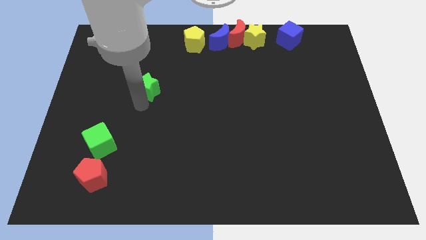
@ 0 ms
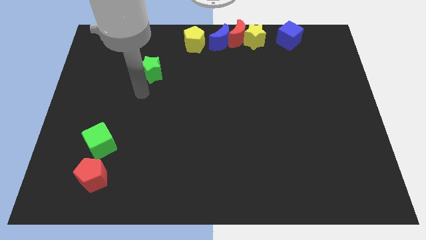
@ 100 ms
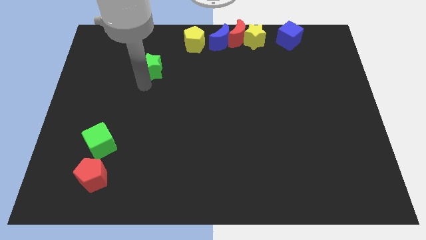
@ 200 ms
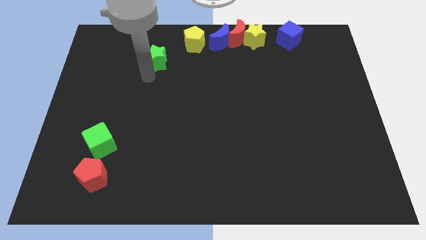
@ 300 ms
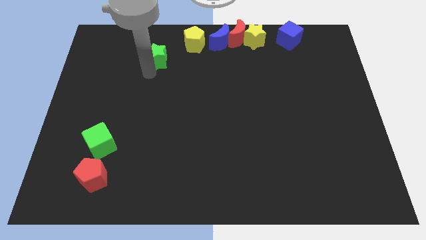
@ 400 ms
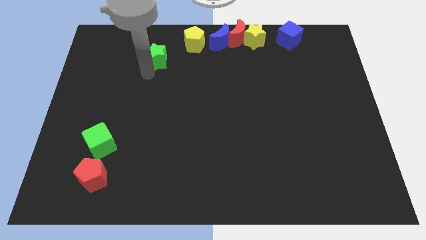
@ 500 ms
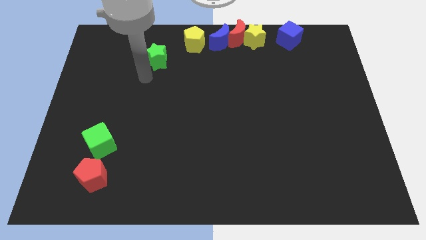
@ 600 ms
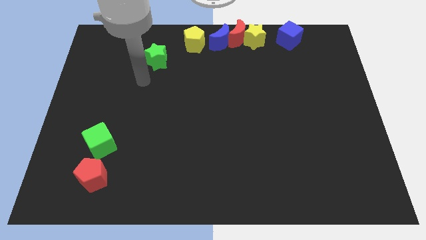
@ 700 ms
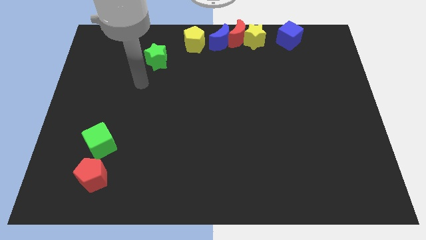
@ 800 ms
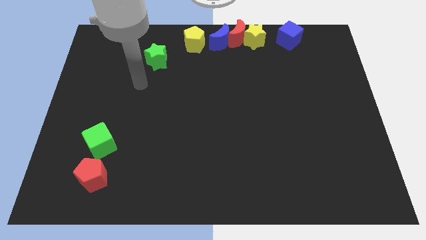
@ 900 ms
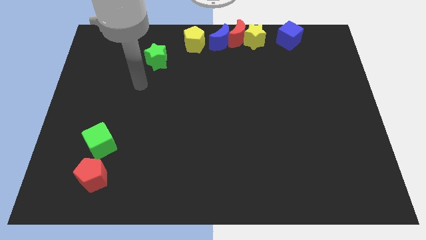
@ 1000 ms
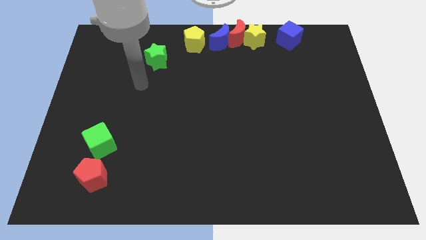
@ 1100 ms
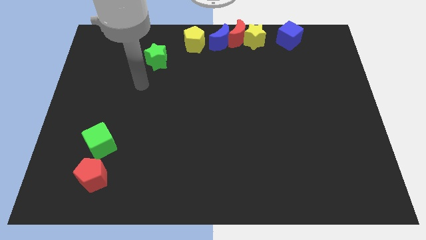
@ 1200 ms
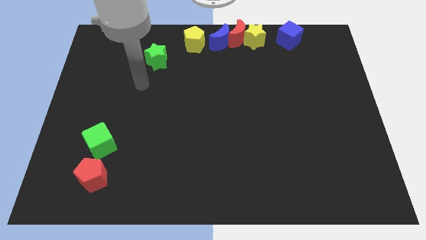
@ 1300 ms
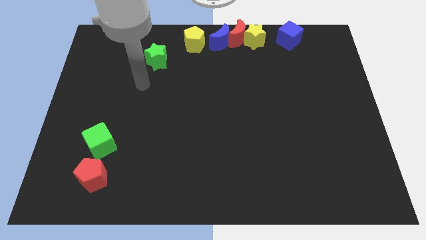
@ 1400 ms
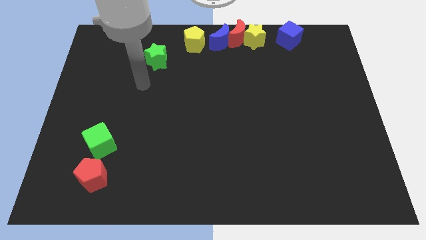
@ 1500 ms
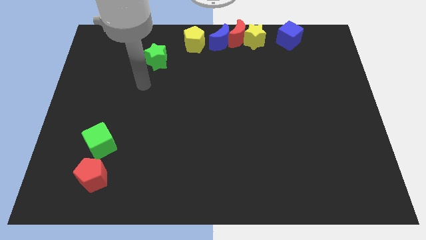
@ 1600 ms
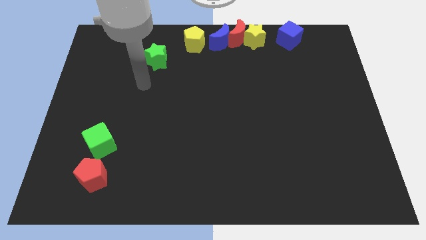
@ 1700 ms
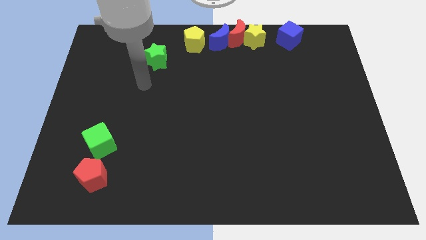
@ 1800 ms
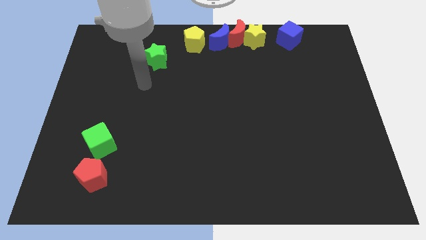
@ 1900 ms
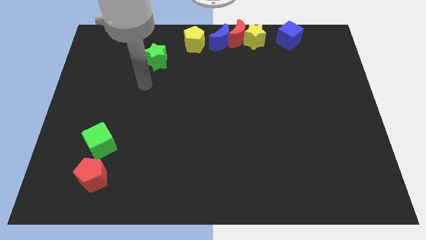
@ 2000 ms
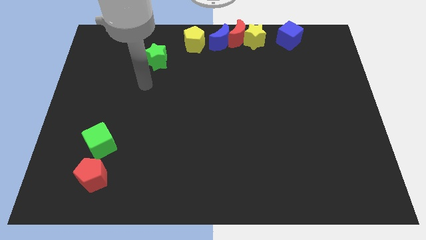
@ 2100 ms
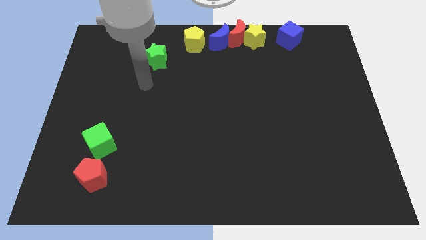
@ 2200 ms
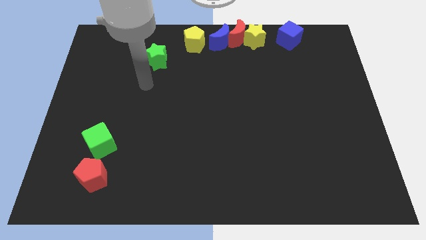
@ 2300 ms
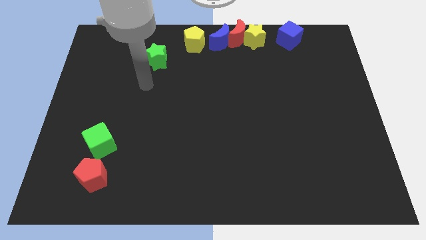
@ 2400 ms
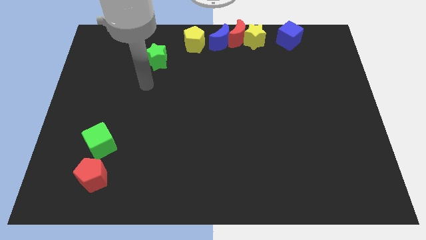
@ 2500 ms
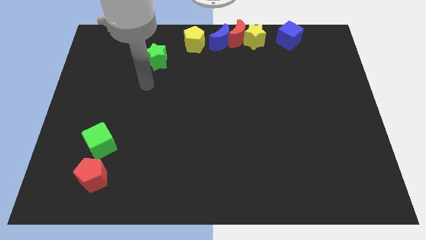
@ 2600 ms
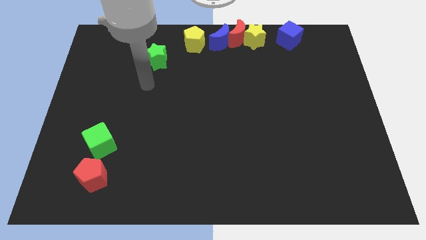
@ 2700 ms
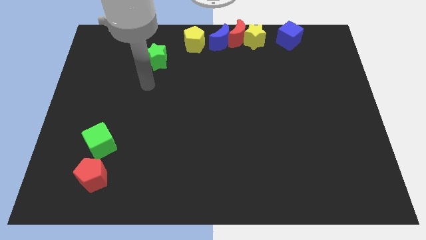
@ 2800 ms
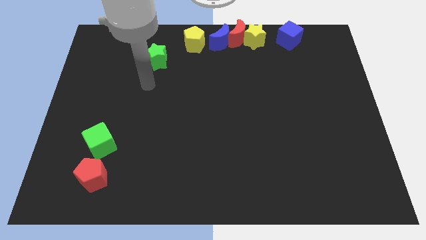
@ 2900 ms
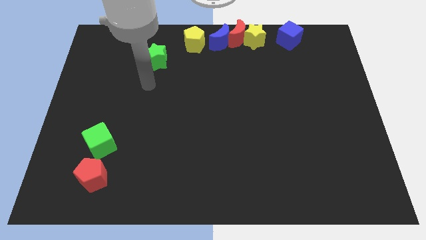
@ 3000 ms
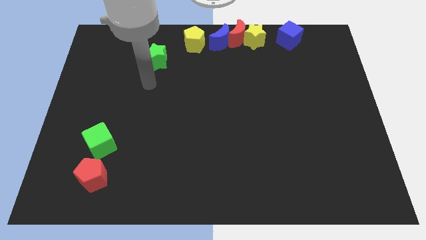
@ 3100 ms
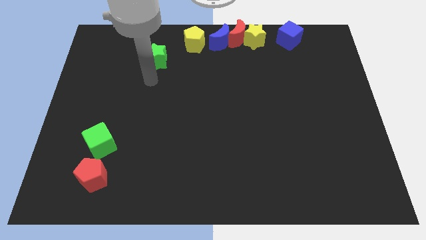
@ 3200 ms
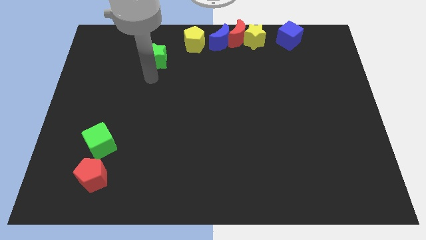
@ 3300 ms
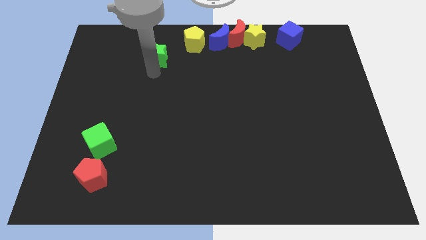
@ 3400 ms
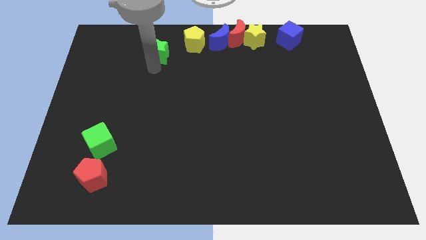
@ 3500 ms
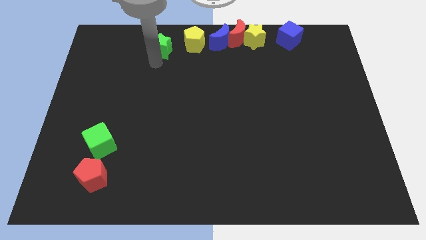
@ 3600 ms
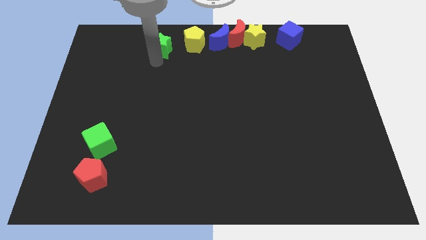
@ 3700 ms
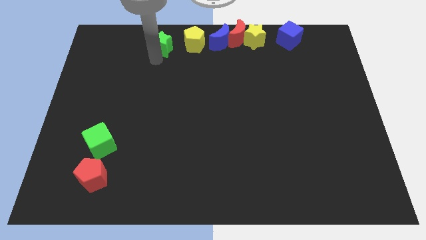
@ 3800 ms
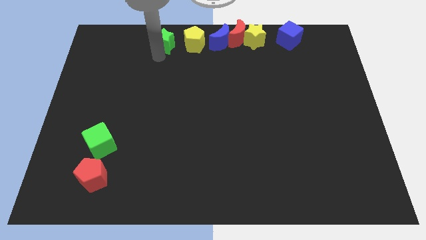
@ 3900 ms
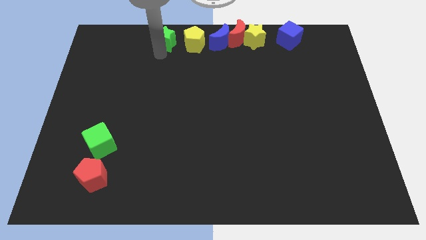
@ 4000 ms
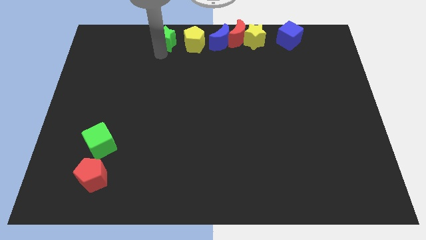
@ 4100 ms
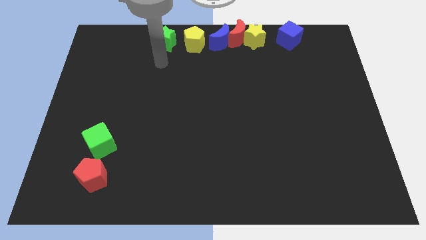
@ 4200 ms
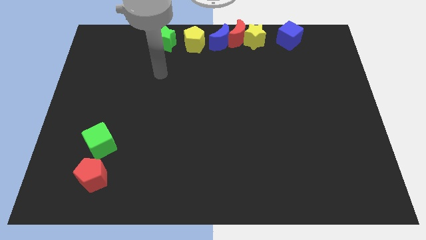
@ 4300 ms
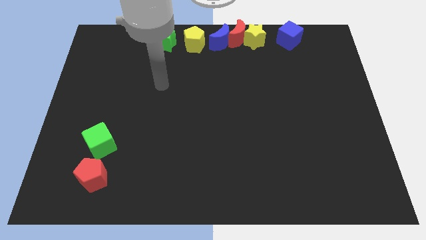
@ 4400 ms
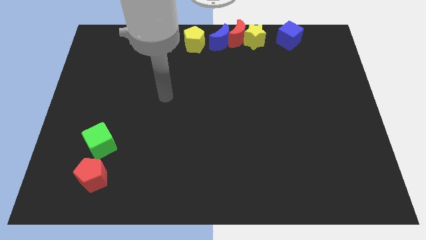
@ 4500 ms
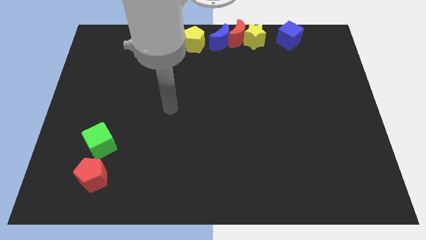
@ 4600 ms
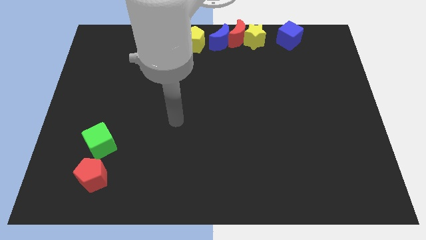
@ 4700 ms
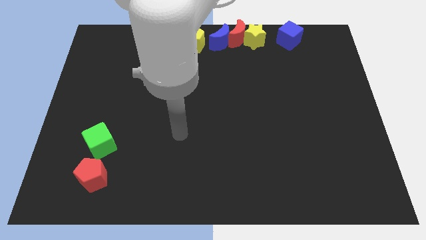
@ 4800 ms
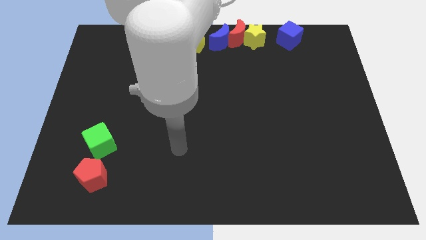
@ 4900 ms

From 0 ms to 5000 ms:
place the green star left to the yellow pentagon

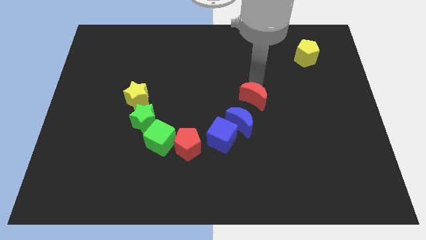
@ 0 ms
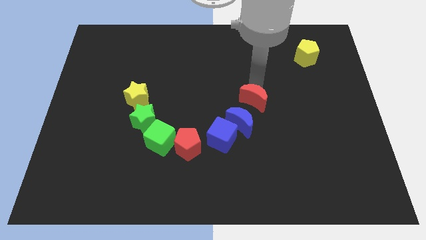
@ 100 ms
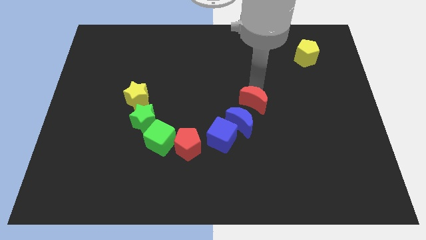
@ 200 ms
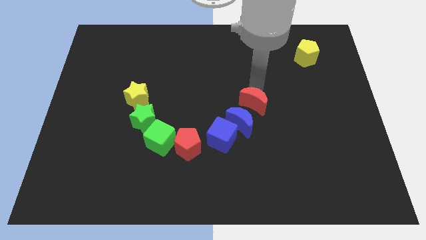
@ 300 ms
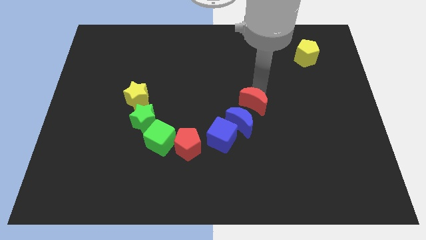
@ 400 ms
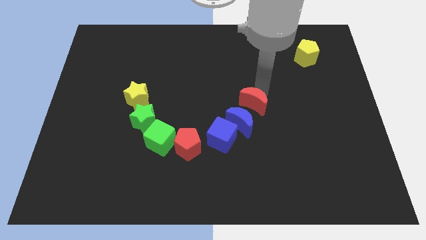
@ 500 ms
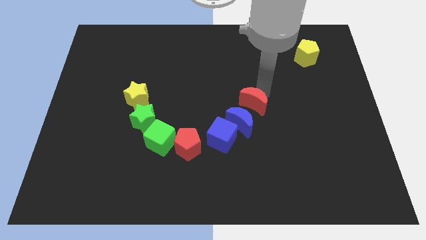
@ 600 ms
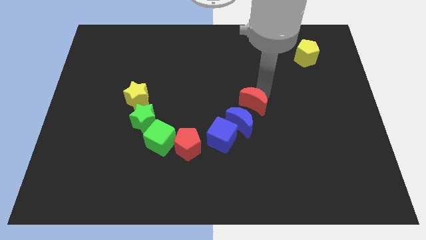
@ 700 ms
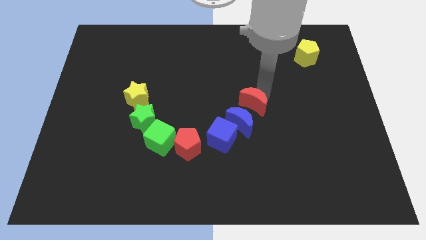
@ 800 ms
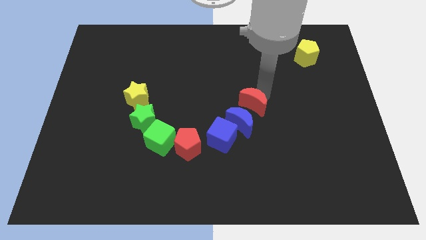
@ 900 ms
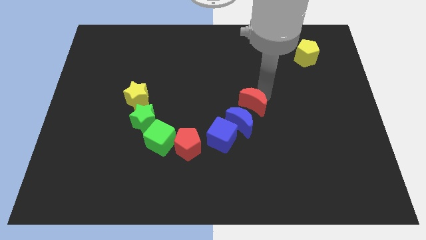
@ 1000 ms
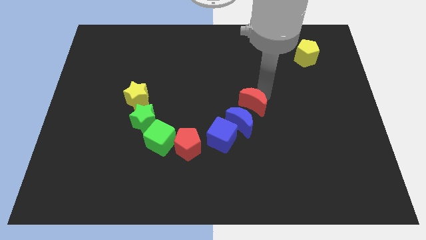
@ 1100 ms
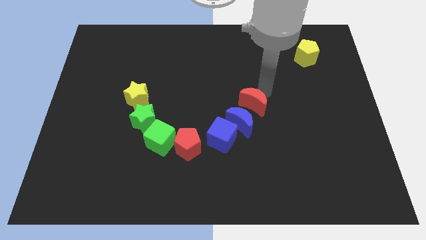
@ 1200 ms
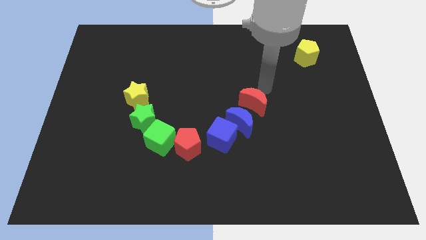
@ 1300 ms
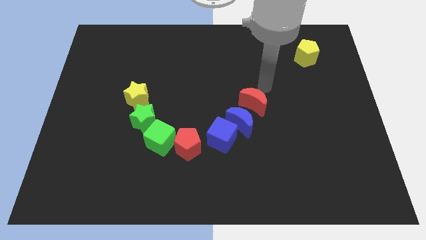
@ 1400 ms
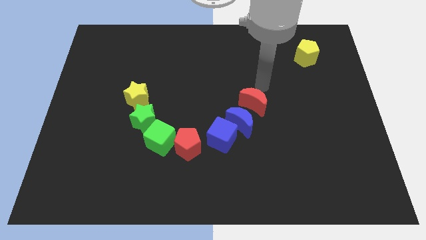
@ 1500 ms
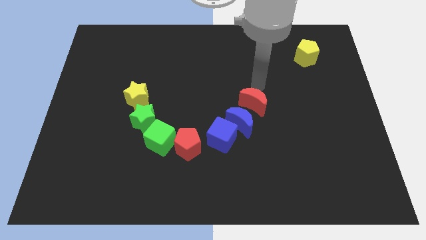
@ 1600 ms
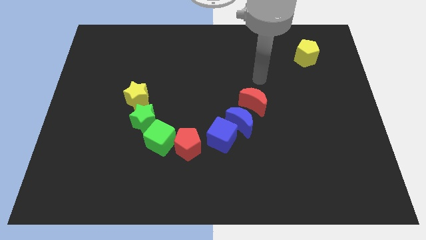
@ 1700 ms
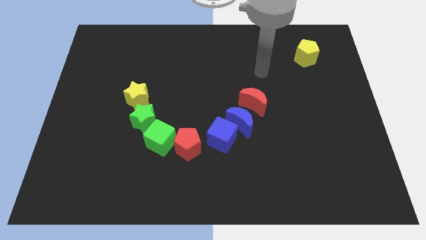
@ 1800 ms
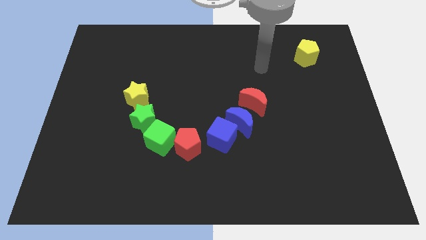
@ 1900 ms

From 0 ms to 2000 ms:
move the red moon diagonally top right to blue moon

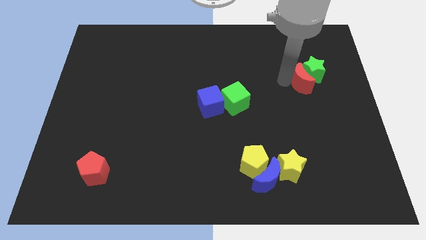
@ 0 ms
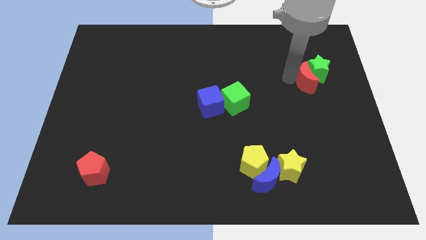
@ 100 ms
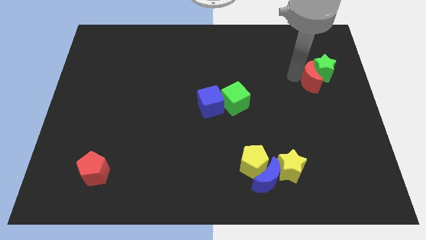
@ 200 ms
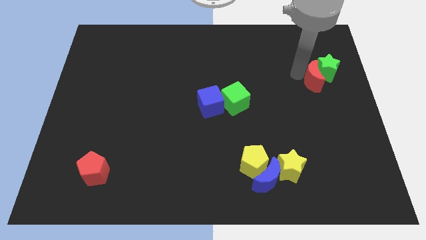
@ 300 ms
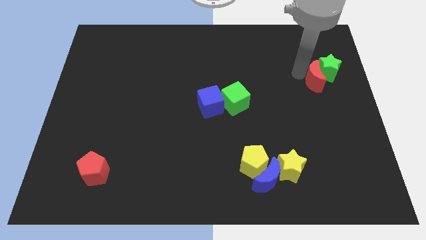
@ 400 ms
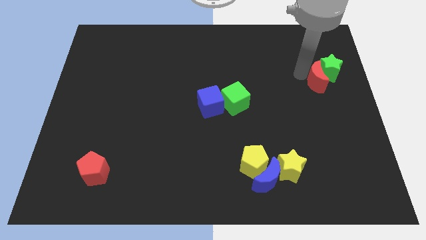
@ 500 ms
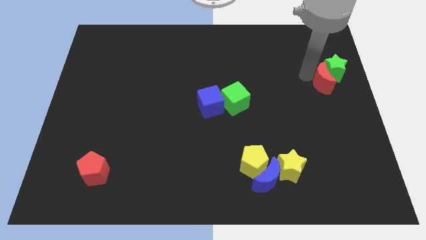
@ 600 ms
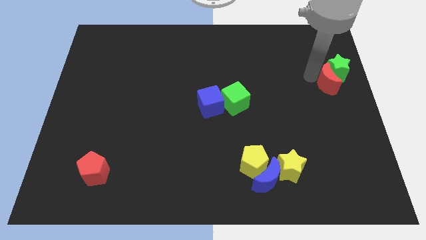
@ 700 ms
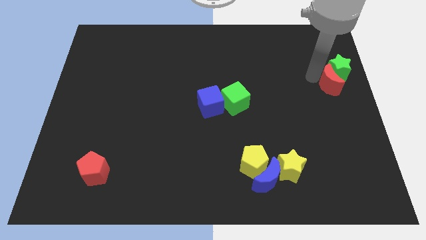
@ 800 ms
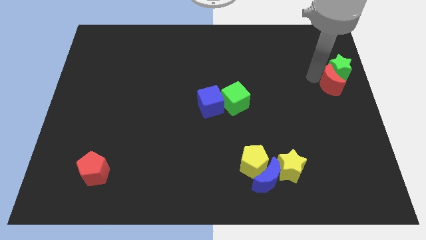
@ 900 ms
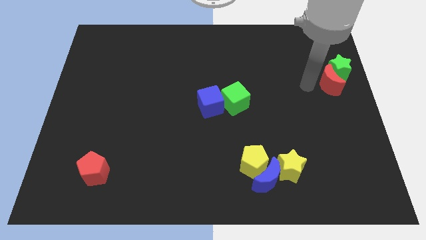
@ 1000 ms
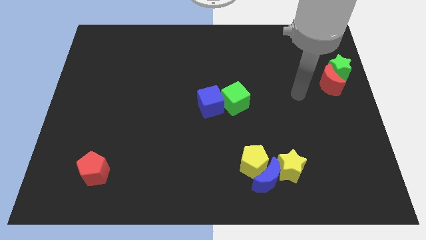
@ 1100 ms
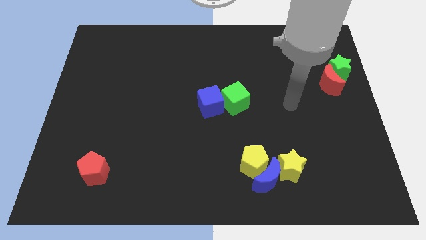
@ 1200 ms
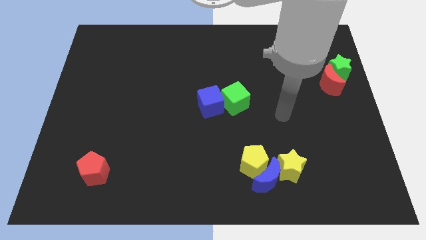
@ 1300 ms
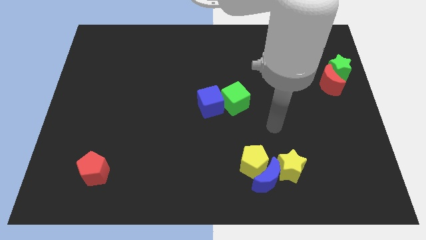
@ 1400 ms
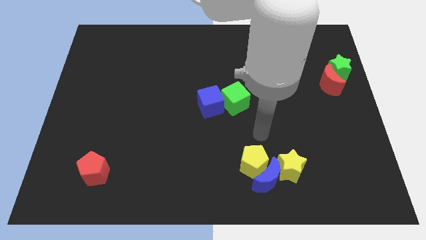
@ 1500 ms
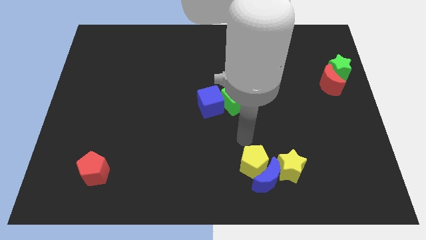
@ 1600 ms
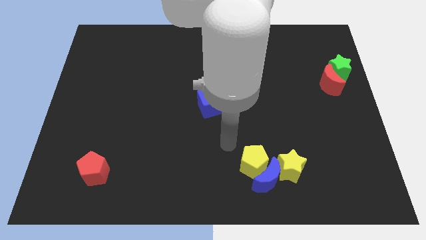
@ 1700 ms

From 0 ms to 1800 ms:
move the red moon and the green star slightly to the right side of the board
